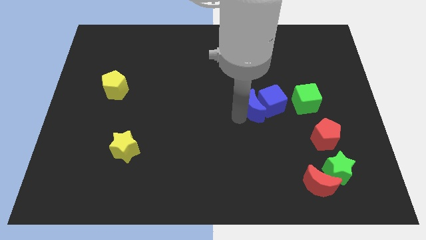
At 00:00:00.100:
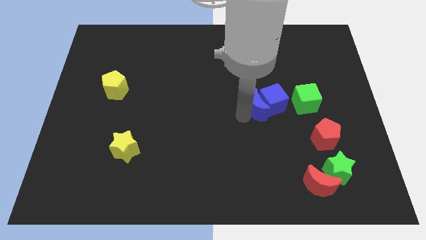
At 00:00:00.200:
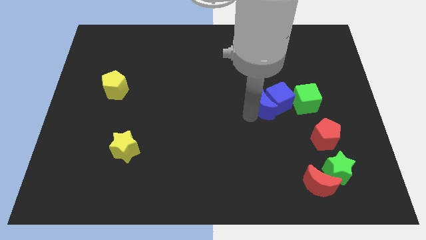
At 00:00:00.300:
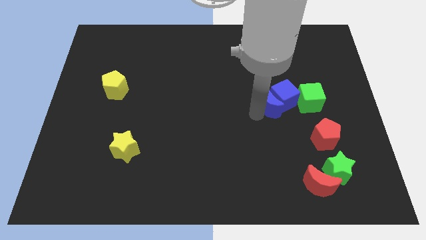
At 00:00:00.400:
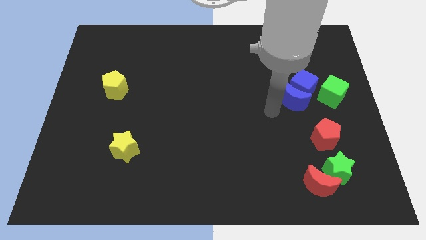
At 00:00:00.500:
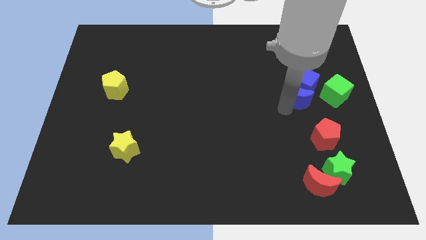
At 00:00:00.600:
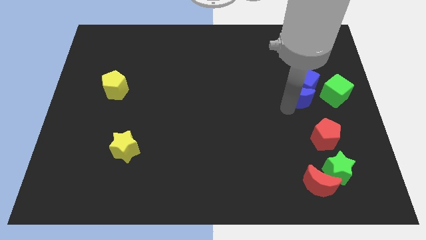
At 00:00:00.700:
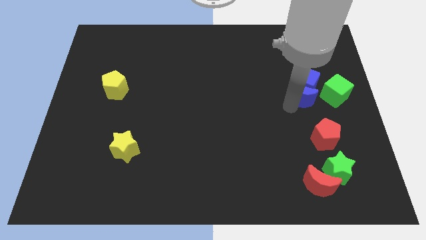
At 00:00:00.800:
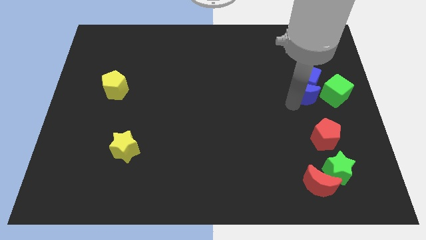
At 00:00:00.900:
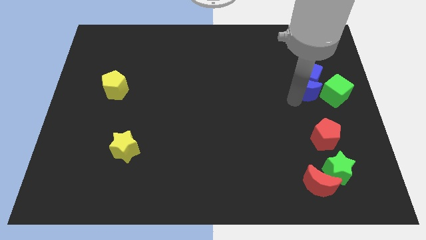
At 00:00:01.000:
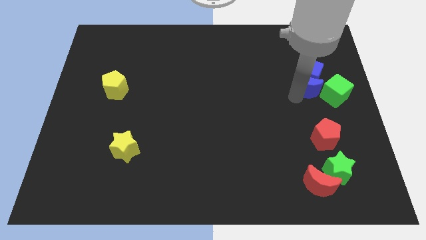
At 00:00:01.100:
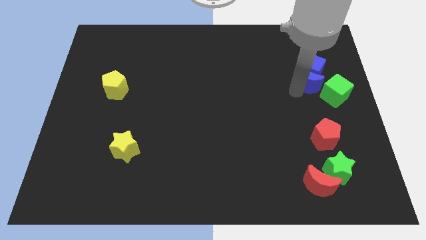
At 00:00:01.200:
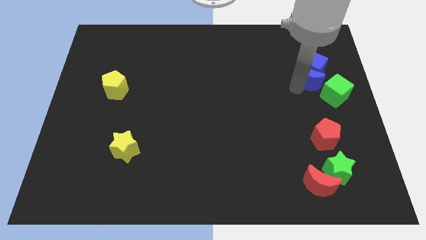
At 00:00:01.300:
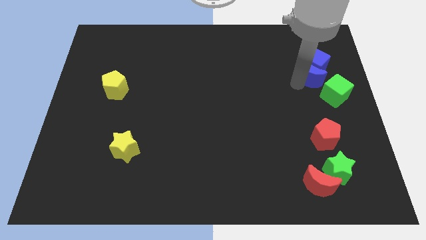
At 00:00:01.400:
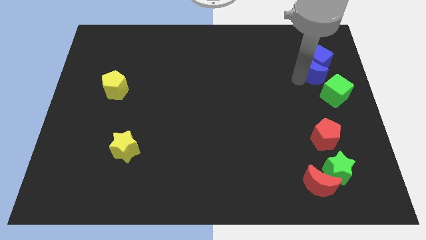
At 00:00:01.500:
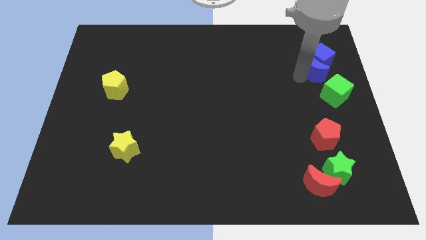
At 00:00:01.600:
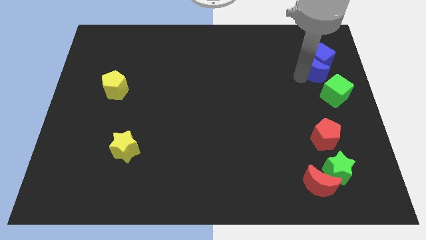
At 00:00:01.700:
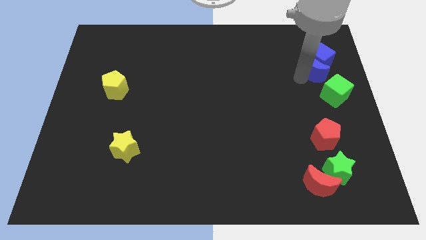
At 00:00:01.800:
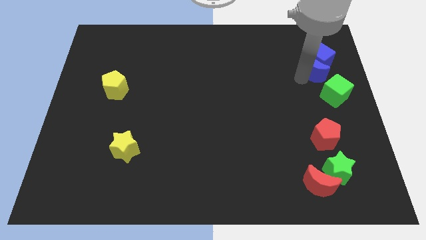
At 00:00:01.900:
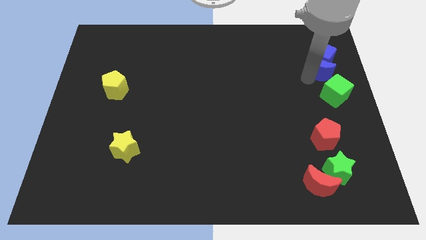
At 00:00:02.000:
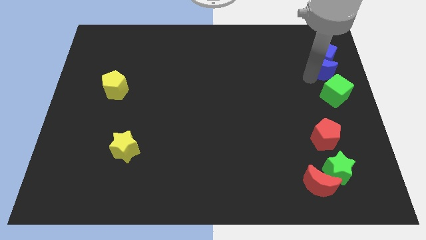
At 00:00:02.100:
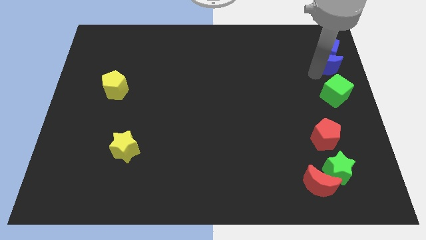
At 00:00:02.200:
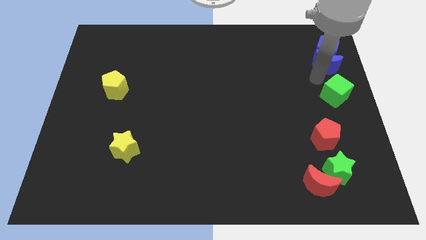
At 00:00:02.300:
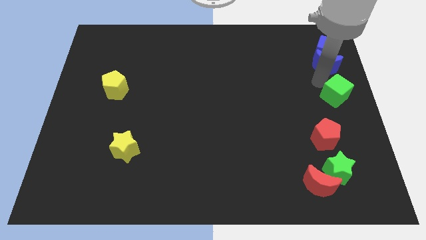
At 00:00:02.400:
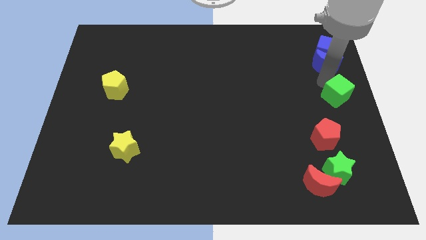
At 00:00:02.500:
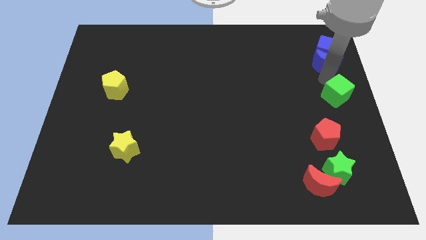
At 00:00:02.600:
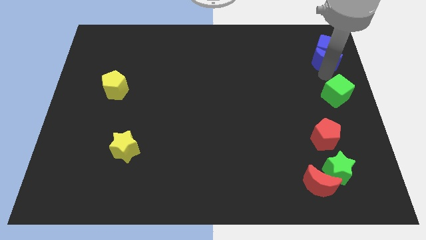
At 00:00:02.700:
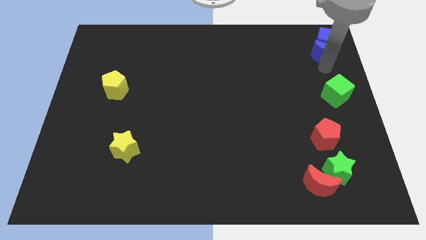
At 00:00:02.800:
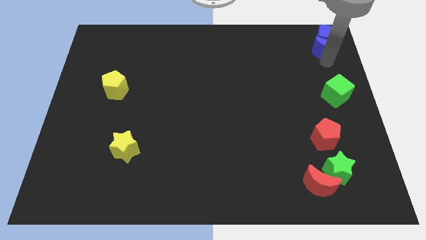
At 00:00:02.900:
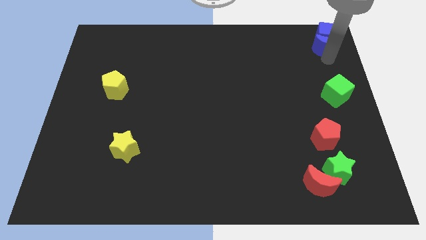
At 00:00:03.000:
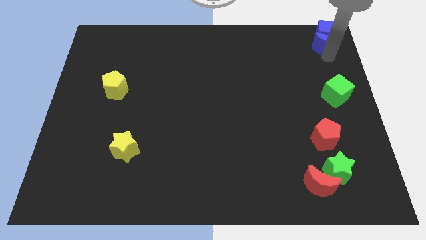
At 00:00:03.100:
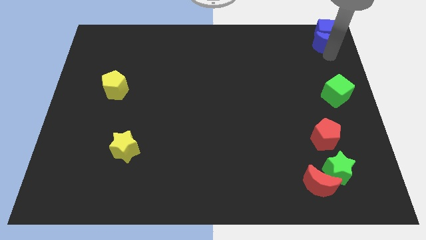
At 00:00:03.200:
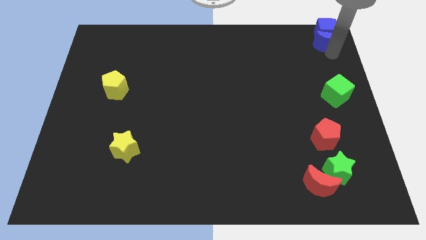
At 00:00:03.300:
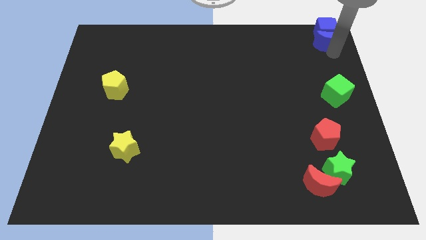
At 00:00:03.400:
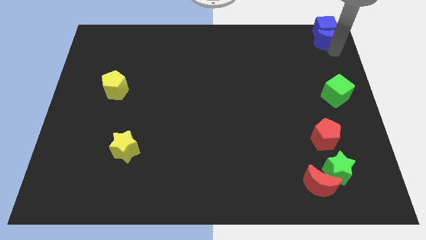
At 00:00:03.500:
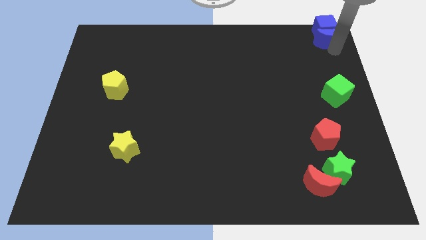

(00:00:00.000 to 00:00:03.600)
move blue blocks vertically above green cube

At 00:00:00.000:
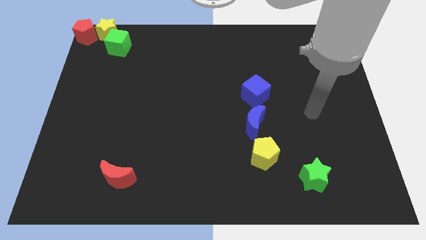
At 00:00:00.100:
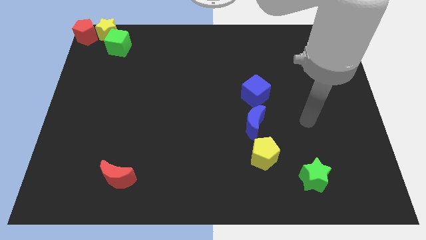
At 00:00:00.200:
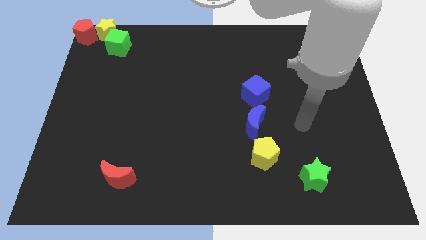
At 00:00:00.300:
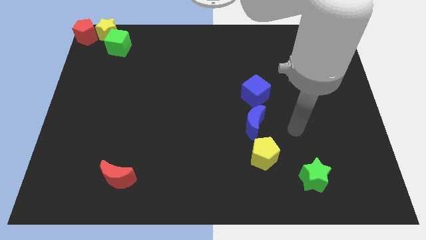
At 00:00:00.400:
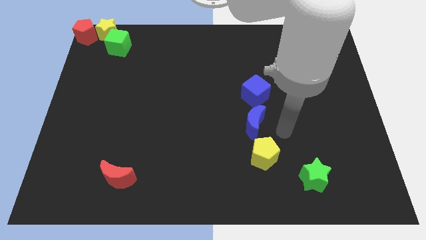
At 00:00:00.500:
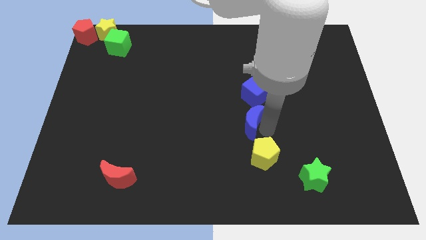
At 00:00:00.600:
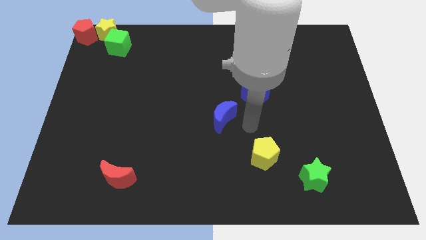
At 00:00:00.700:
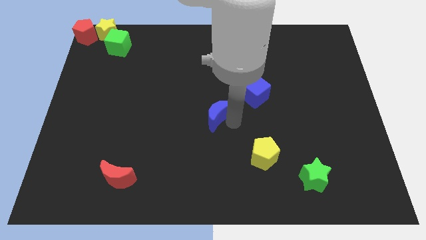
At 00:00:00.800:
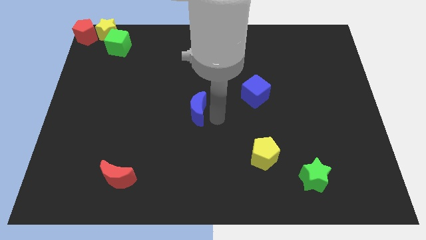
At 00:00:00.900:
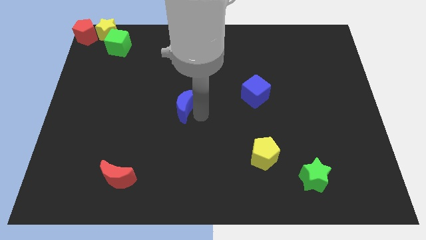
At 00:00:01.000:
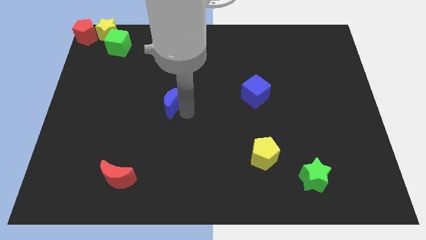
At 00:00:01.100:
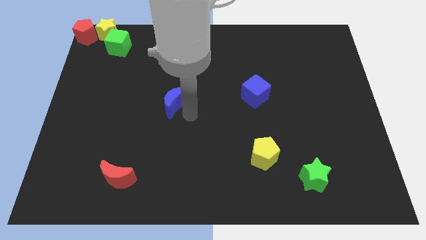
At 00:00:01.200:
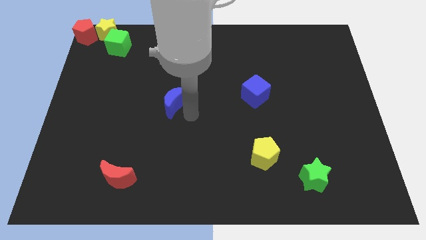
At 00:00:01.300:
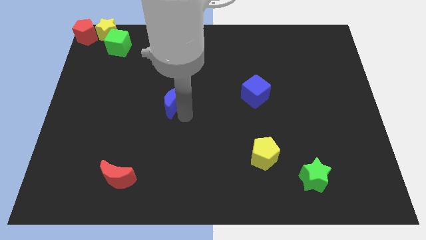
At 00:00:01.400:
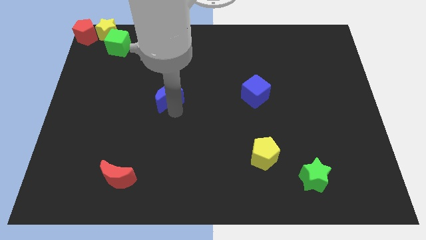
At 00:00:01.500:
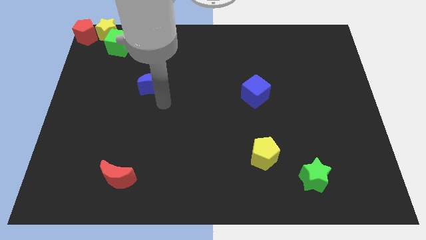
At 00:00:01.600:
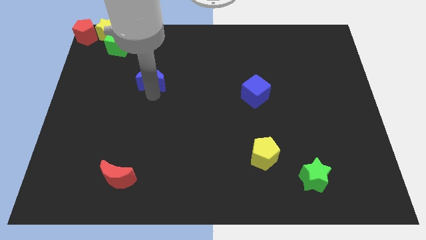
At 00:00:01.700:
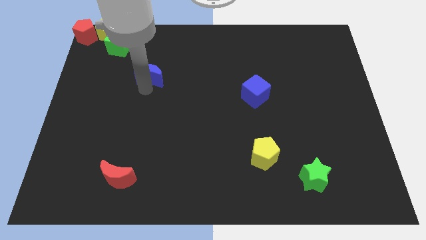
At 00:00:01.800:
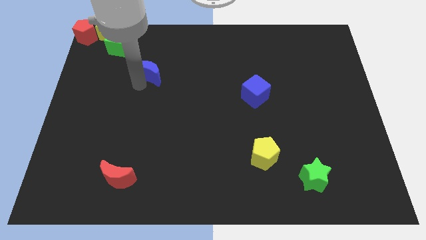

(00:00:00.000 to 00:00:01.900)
move the blue moon towards the top left corner

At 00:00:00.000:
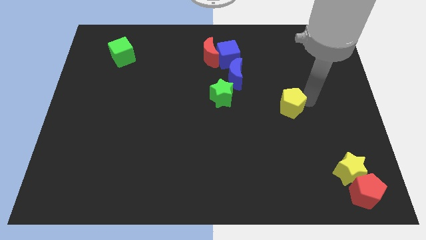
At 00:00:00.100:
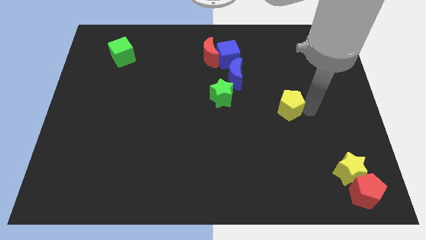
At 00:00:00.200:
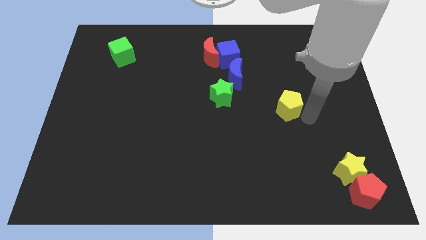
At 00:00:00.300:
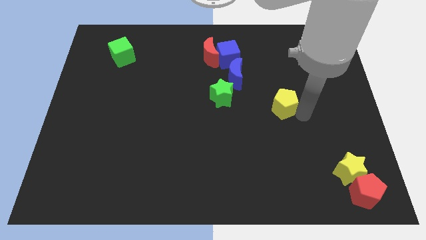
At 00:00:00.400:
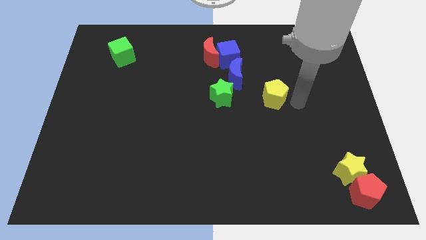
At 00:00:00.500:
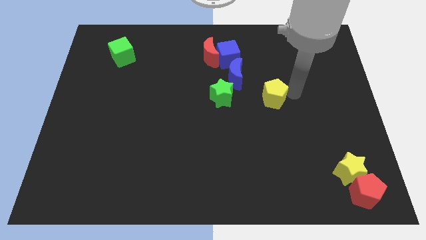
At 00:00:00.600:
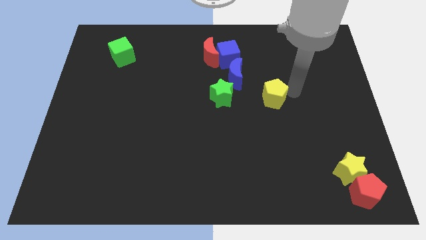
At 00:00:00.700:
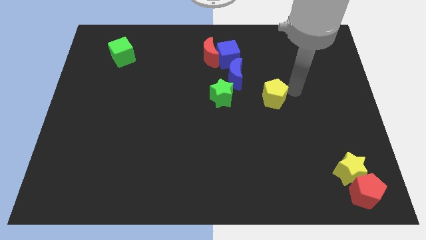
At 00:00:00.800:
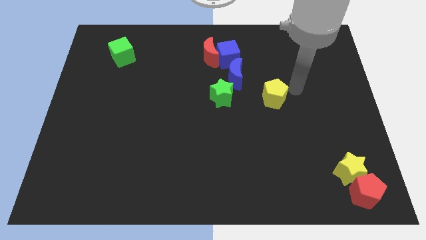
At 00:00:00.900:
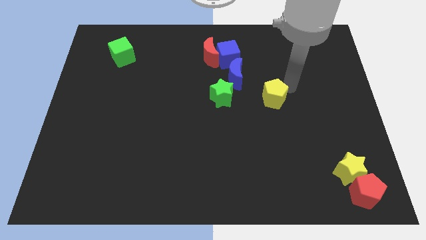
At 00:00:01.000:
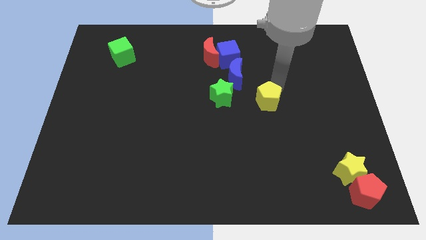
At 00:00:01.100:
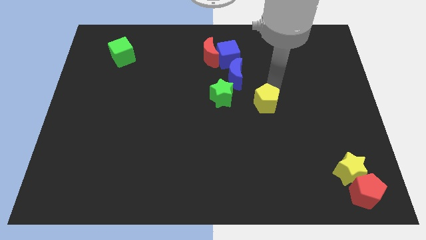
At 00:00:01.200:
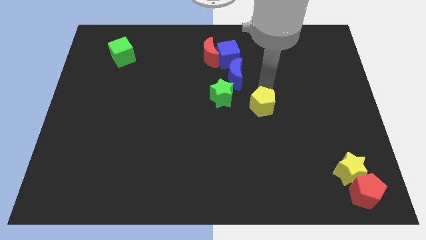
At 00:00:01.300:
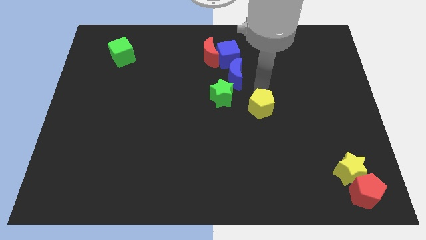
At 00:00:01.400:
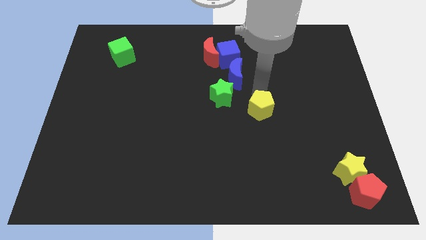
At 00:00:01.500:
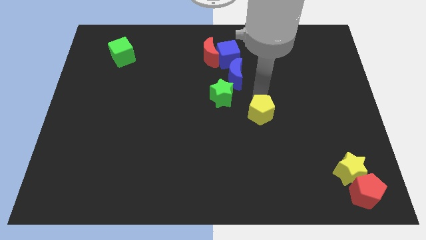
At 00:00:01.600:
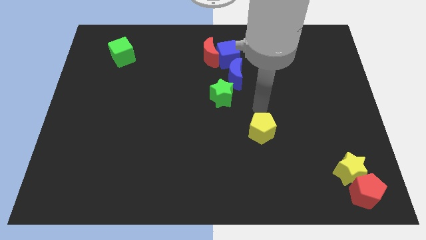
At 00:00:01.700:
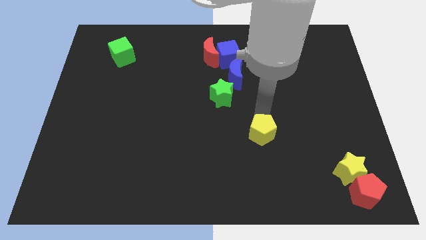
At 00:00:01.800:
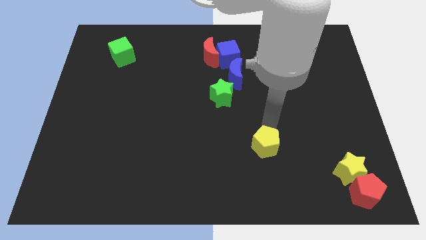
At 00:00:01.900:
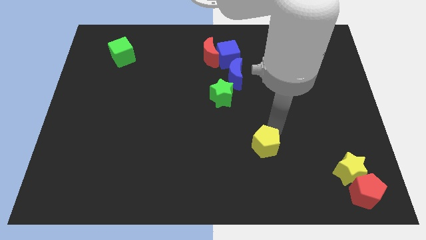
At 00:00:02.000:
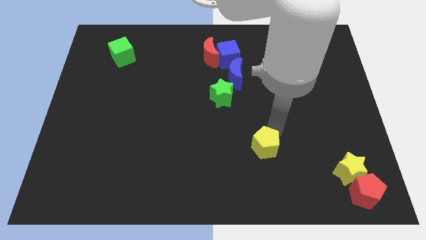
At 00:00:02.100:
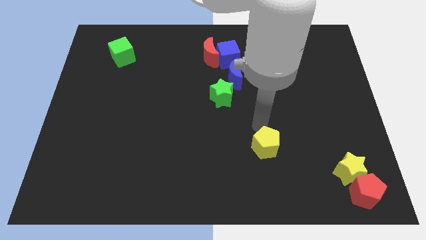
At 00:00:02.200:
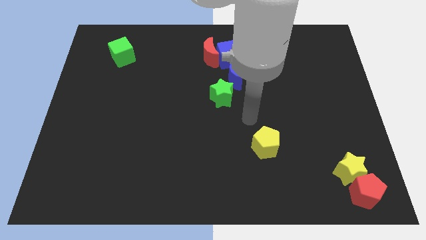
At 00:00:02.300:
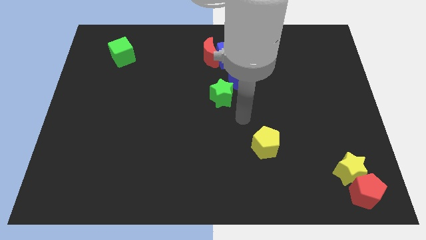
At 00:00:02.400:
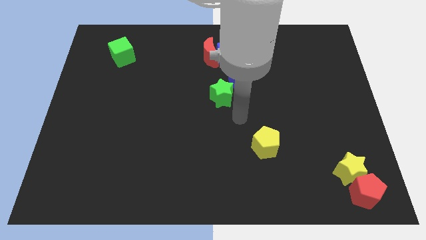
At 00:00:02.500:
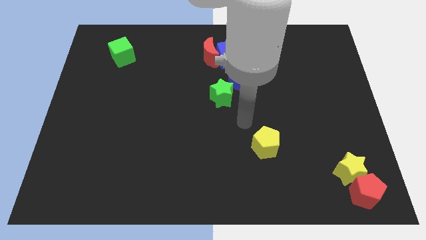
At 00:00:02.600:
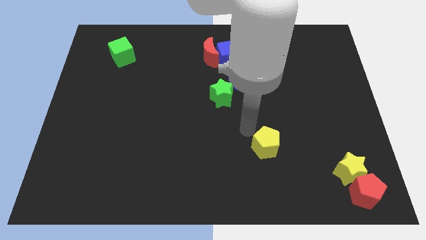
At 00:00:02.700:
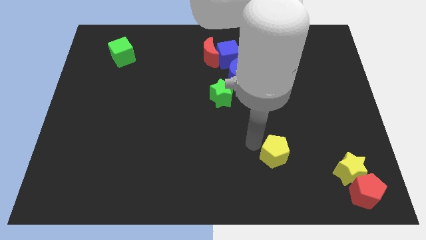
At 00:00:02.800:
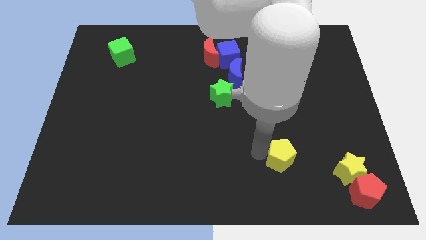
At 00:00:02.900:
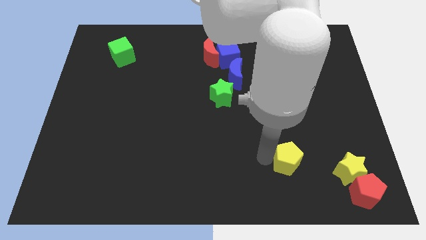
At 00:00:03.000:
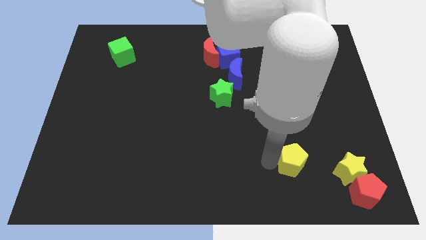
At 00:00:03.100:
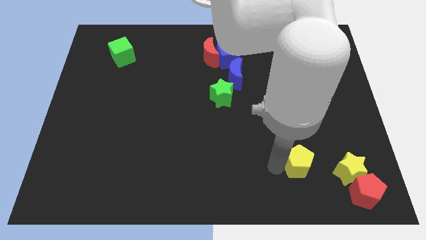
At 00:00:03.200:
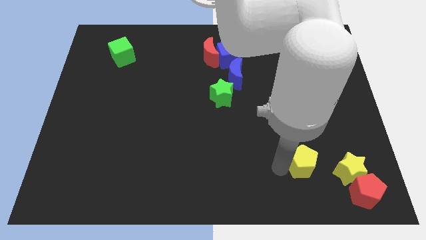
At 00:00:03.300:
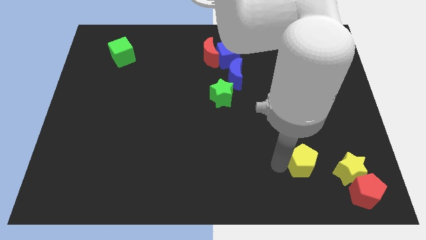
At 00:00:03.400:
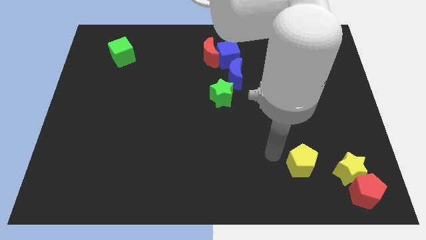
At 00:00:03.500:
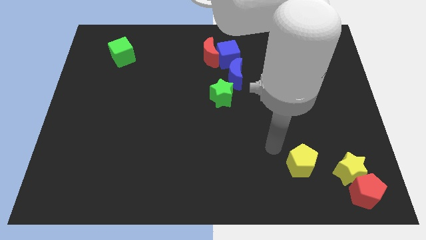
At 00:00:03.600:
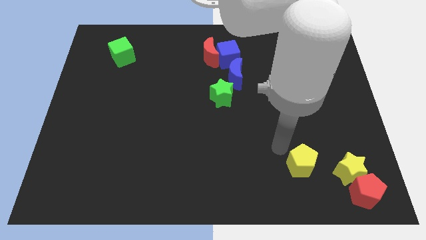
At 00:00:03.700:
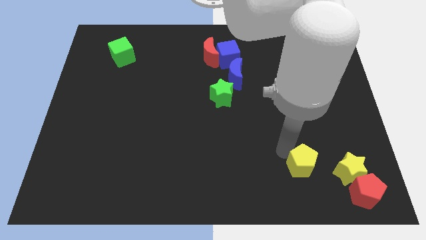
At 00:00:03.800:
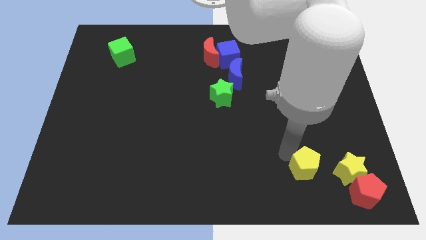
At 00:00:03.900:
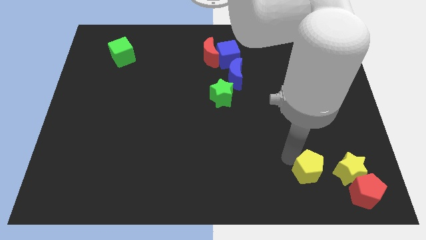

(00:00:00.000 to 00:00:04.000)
put the yellow pentagon left to the yellow star
